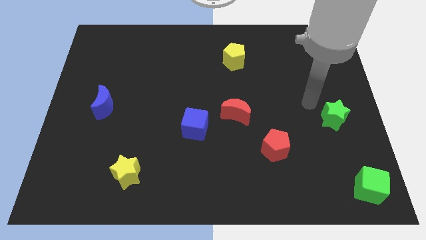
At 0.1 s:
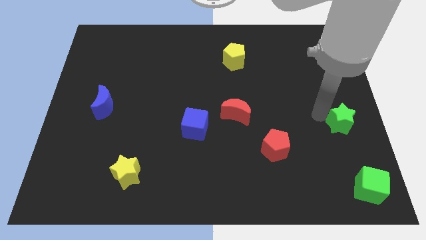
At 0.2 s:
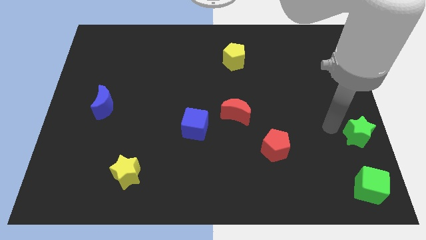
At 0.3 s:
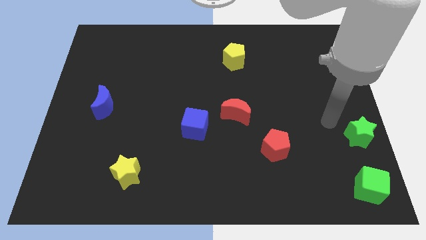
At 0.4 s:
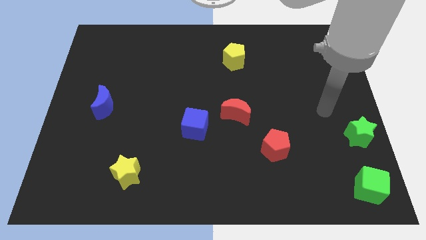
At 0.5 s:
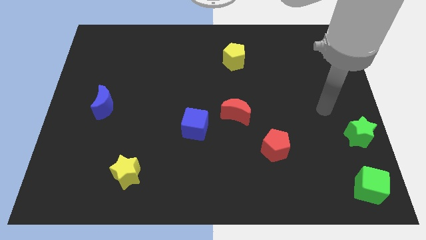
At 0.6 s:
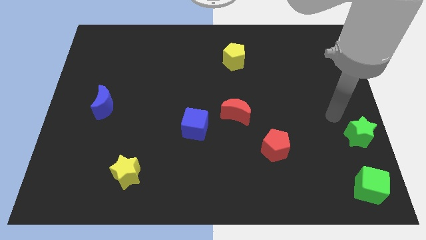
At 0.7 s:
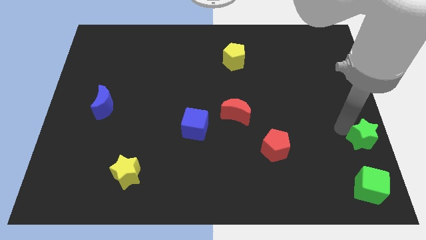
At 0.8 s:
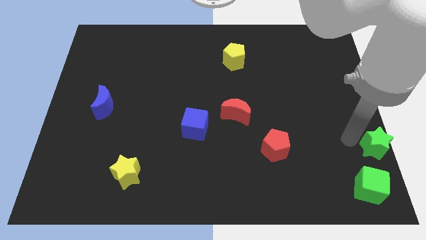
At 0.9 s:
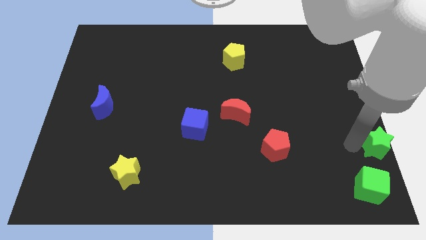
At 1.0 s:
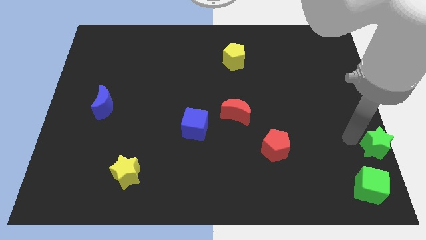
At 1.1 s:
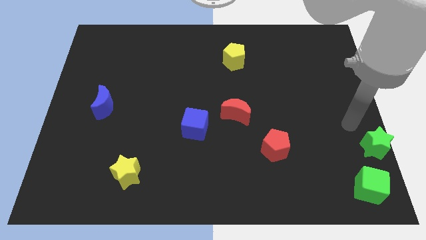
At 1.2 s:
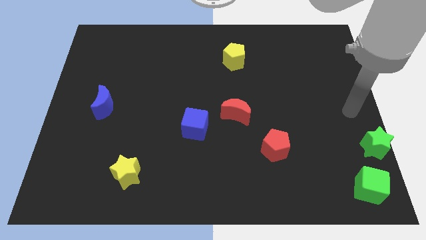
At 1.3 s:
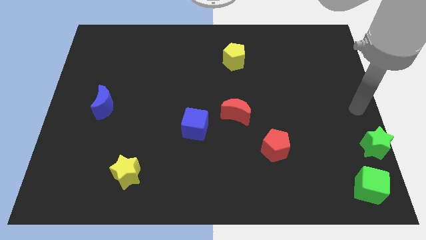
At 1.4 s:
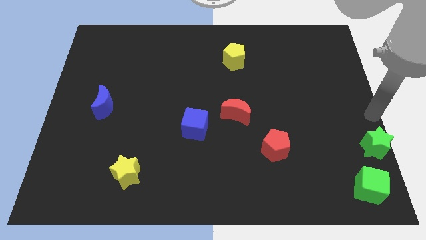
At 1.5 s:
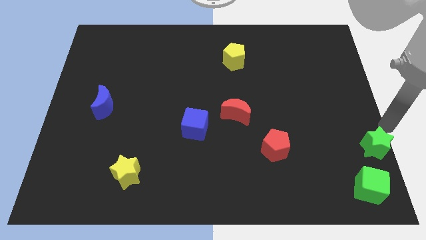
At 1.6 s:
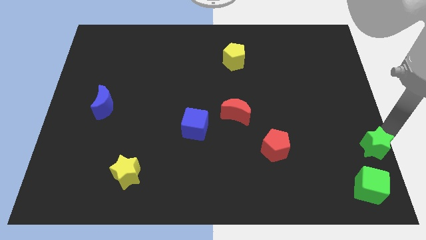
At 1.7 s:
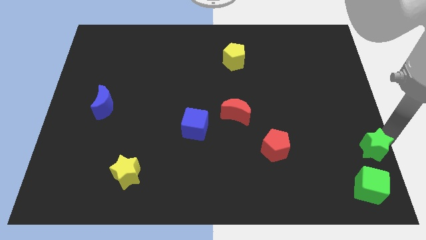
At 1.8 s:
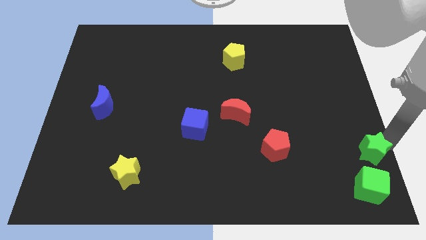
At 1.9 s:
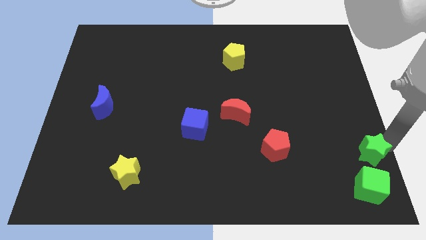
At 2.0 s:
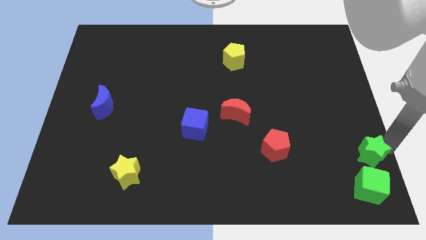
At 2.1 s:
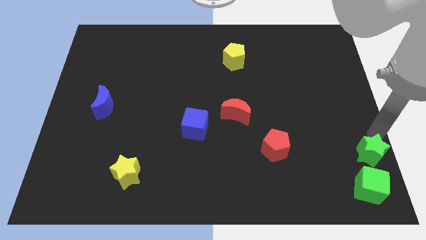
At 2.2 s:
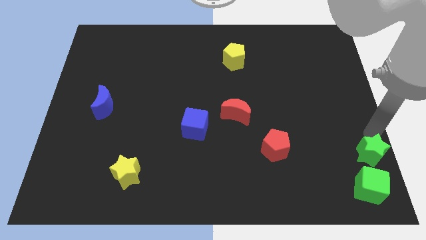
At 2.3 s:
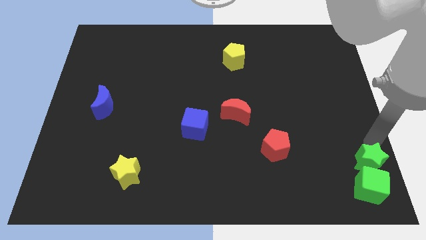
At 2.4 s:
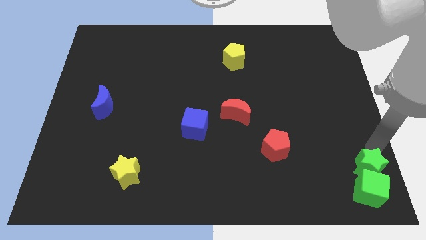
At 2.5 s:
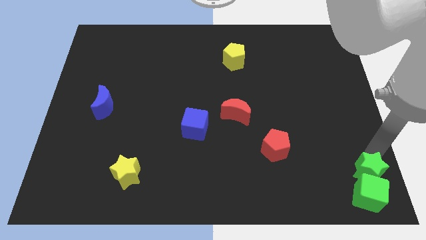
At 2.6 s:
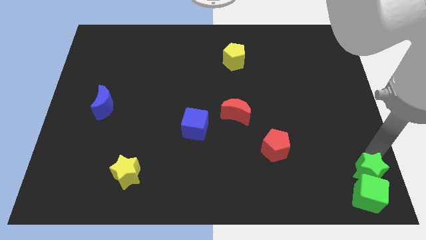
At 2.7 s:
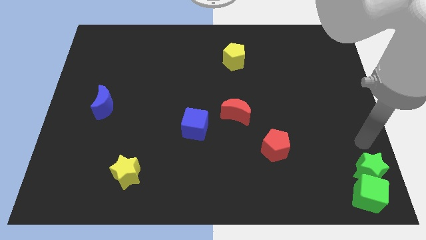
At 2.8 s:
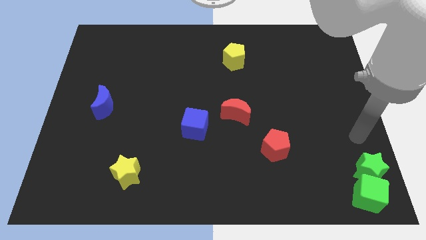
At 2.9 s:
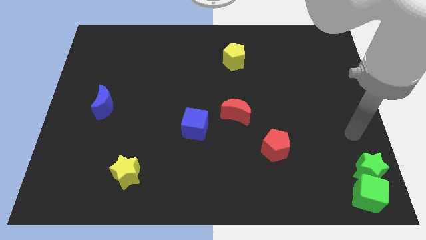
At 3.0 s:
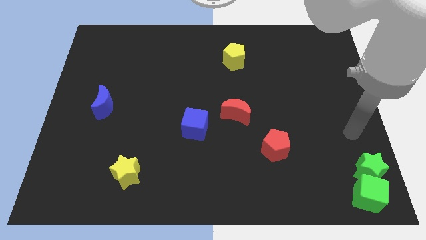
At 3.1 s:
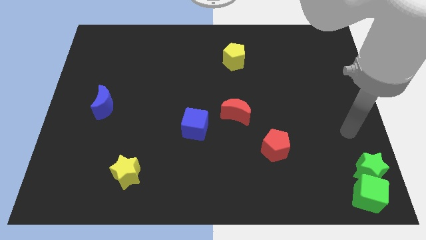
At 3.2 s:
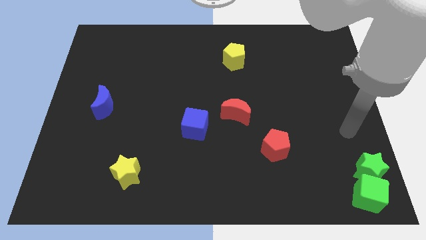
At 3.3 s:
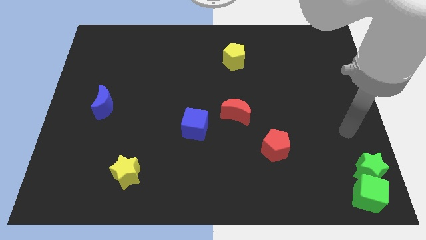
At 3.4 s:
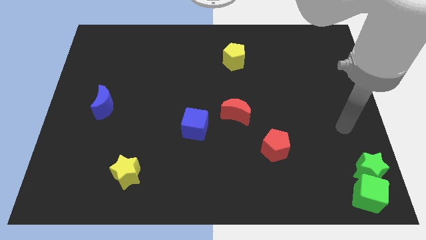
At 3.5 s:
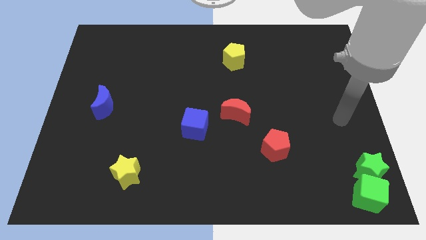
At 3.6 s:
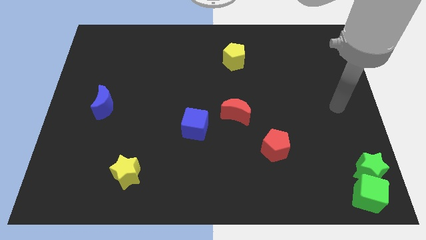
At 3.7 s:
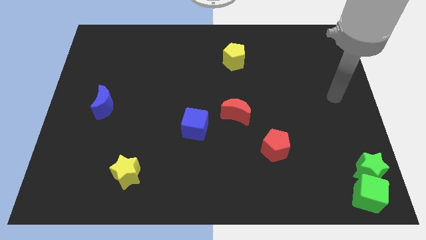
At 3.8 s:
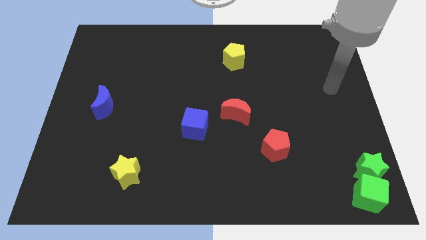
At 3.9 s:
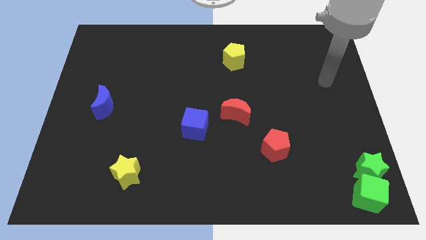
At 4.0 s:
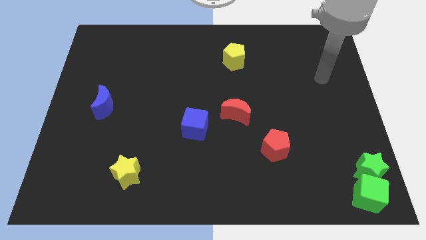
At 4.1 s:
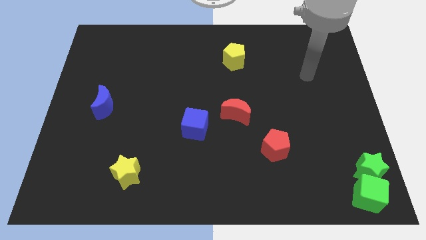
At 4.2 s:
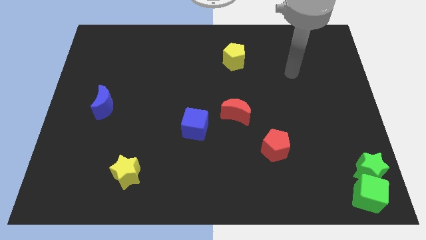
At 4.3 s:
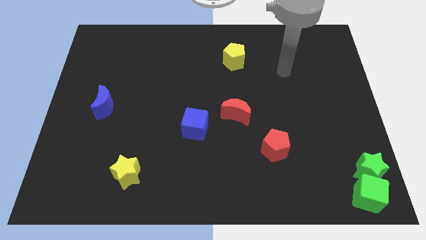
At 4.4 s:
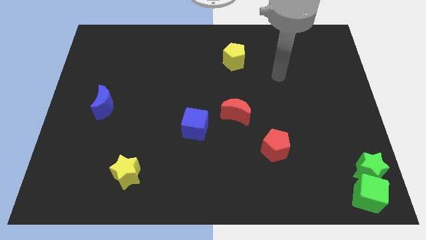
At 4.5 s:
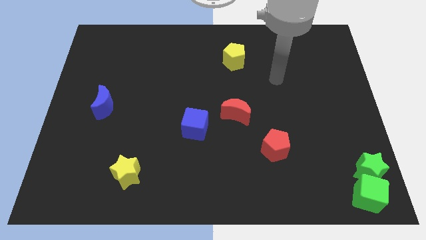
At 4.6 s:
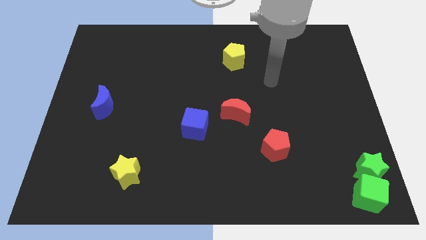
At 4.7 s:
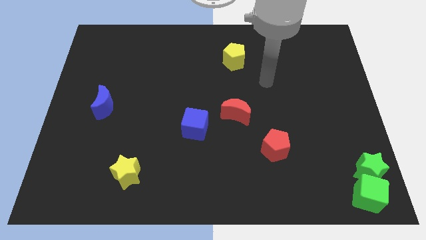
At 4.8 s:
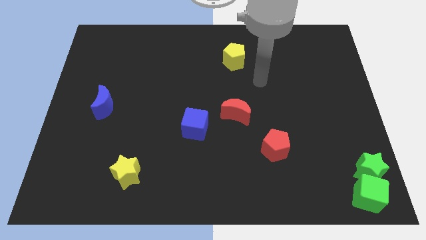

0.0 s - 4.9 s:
place the green star to the top of green cube

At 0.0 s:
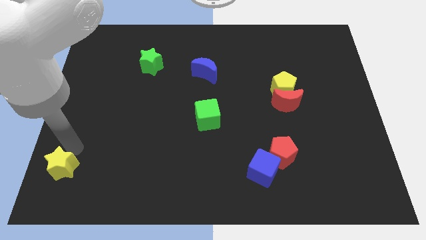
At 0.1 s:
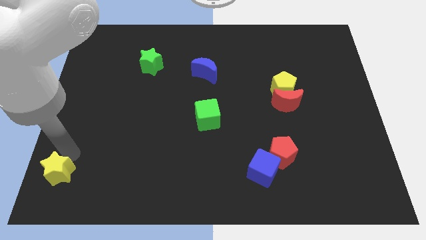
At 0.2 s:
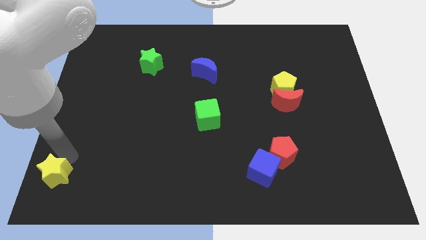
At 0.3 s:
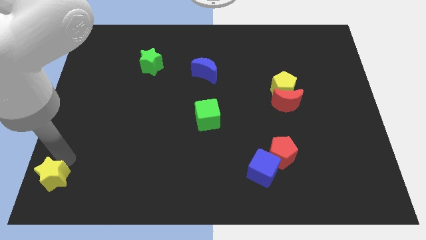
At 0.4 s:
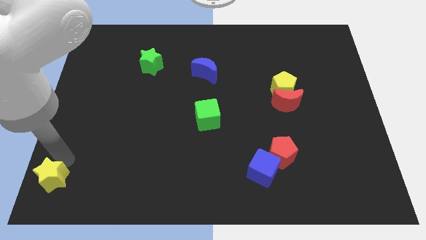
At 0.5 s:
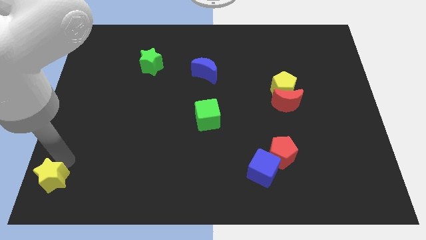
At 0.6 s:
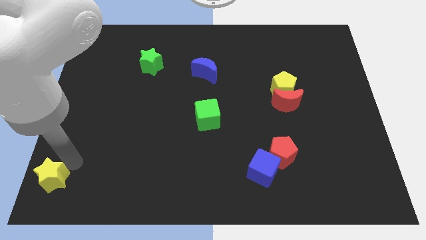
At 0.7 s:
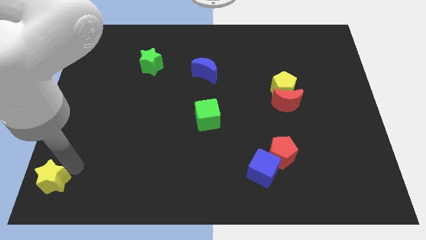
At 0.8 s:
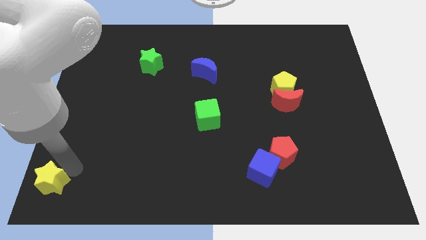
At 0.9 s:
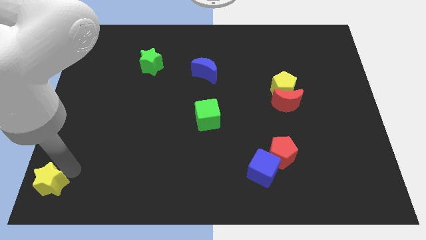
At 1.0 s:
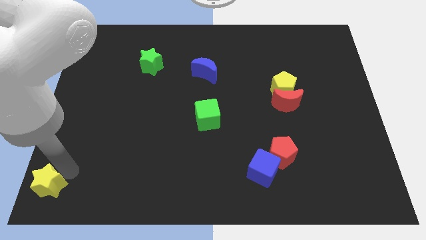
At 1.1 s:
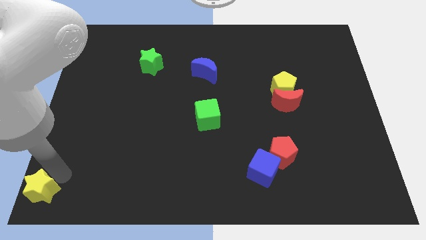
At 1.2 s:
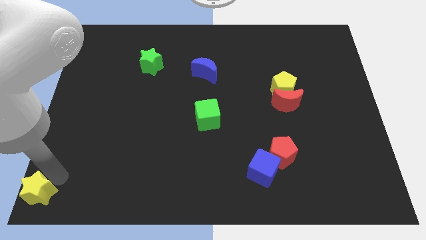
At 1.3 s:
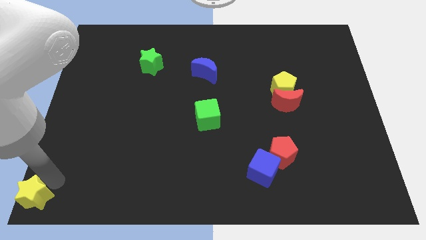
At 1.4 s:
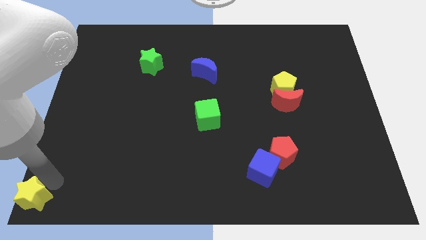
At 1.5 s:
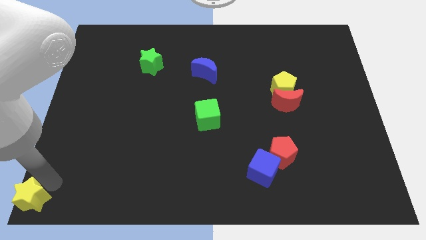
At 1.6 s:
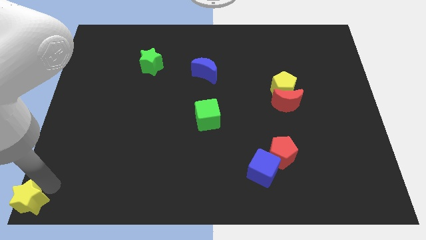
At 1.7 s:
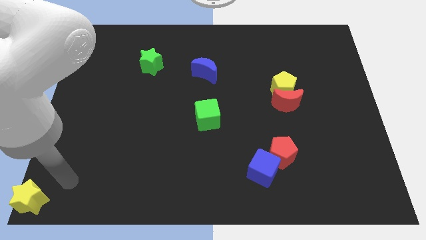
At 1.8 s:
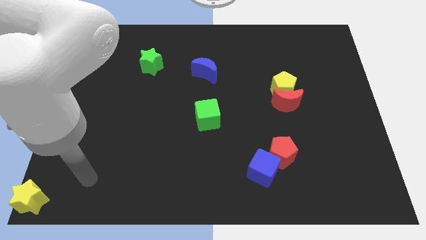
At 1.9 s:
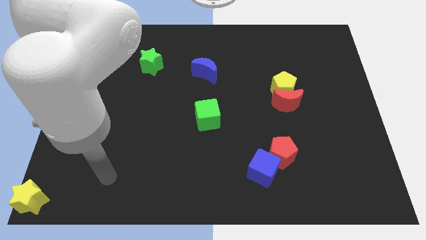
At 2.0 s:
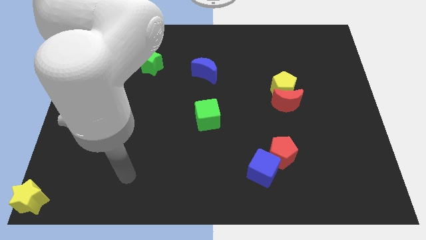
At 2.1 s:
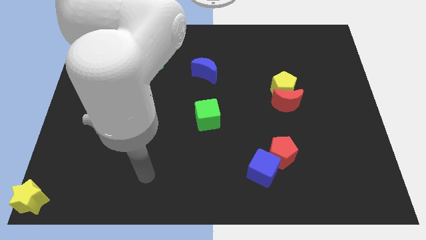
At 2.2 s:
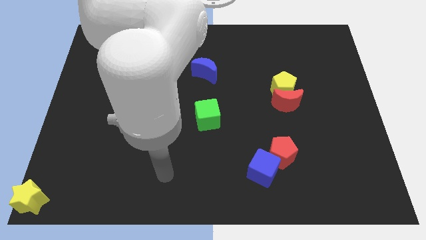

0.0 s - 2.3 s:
move the yellow star to the bottom left corner

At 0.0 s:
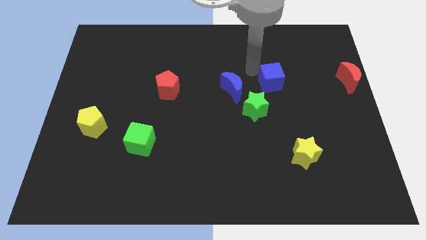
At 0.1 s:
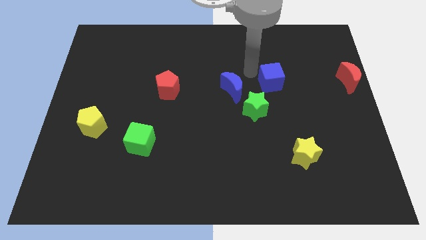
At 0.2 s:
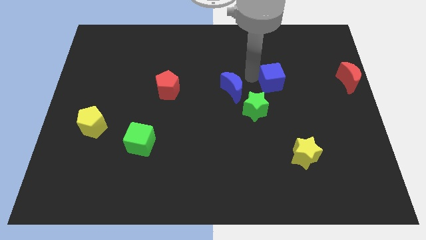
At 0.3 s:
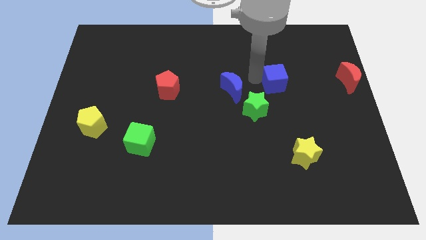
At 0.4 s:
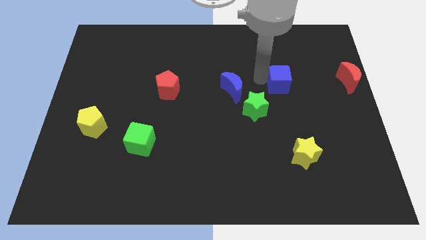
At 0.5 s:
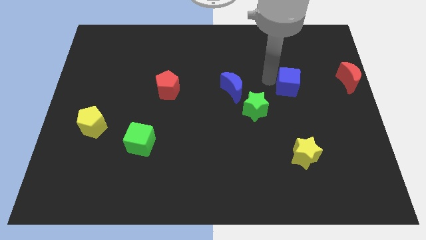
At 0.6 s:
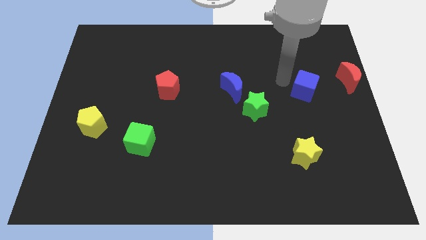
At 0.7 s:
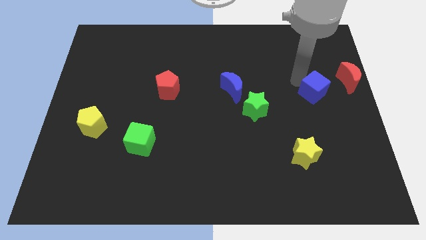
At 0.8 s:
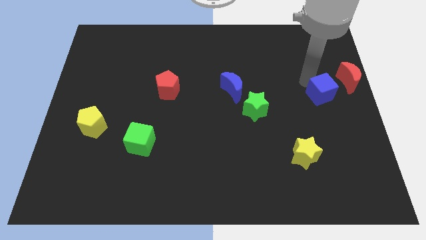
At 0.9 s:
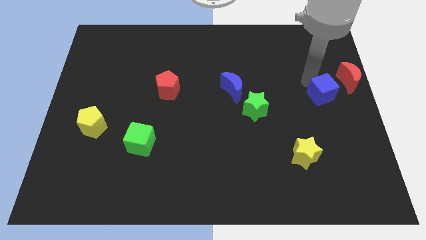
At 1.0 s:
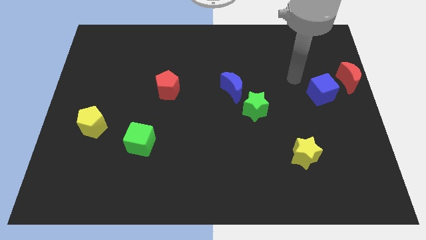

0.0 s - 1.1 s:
push the blue cube to the left of the red crescent

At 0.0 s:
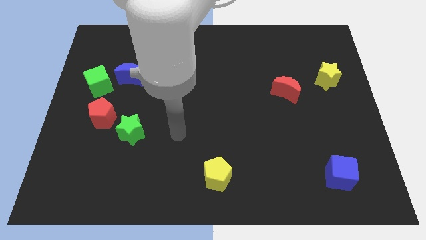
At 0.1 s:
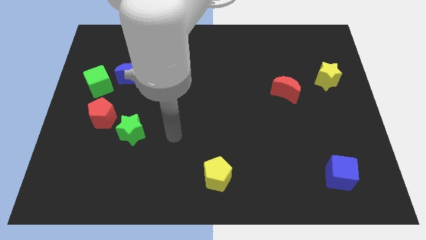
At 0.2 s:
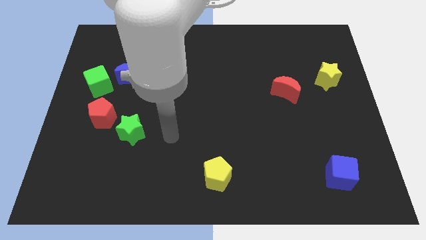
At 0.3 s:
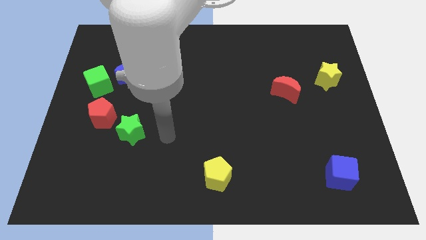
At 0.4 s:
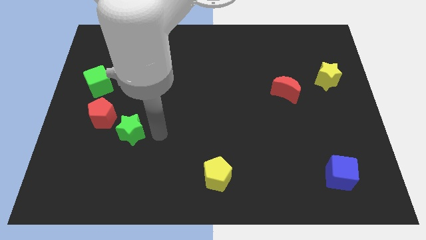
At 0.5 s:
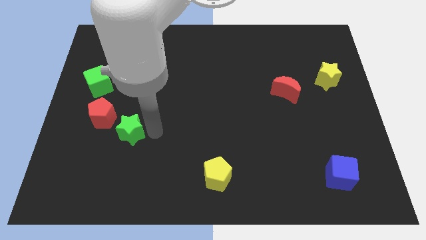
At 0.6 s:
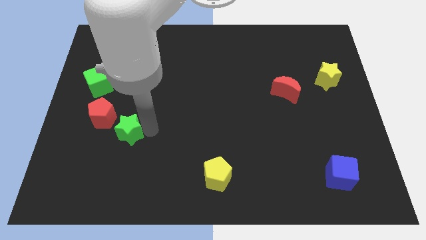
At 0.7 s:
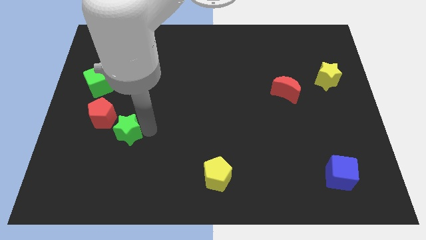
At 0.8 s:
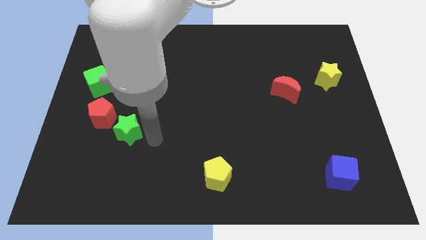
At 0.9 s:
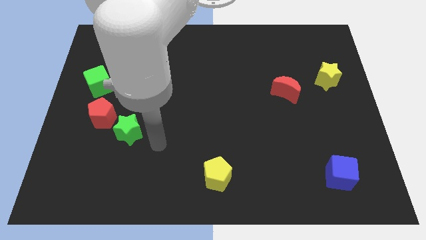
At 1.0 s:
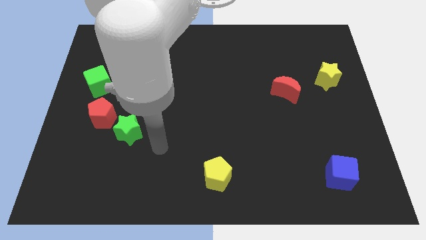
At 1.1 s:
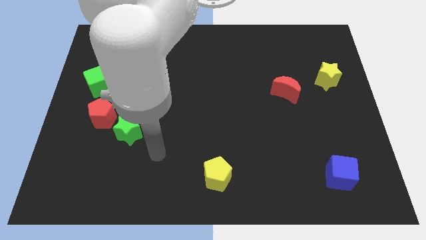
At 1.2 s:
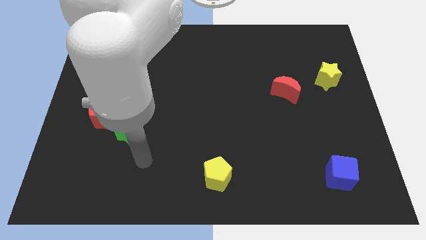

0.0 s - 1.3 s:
push the green star slightly to the left side
